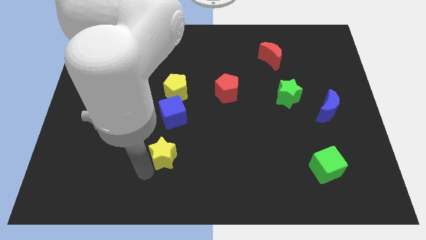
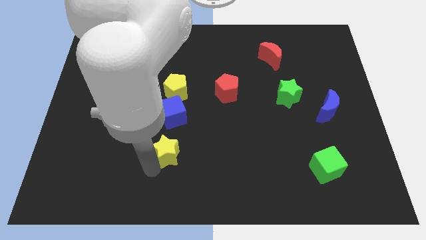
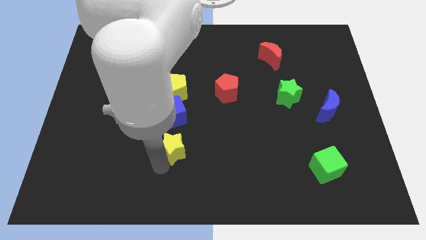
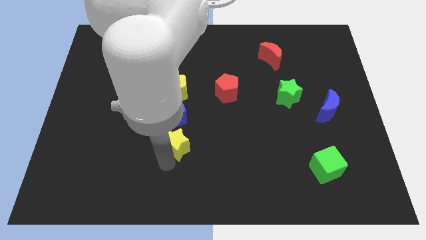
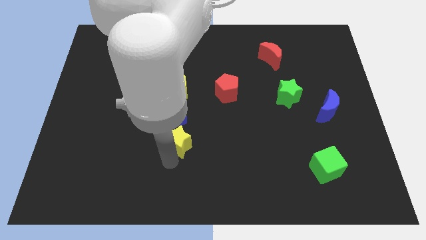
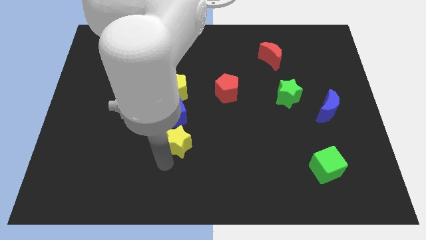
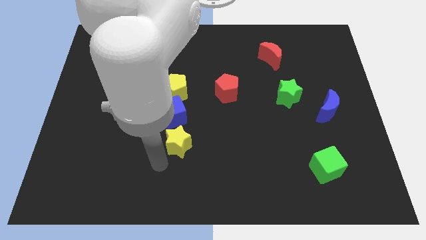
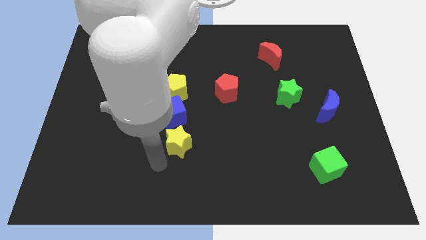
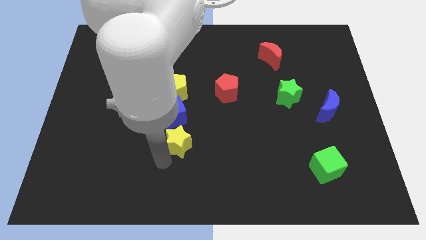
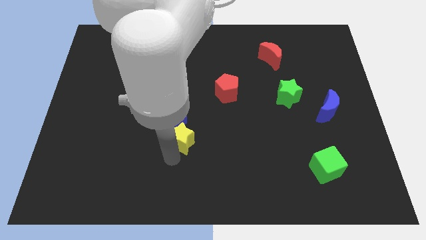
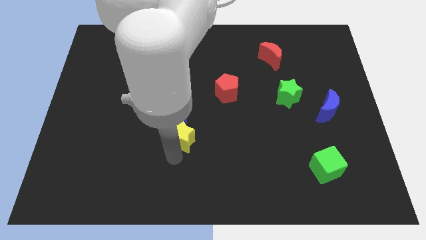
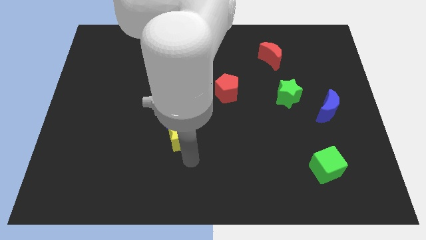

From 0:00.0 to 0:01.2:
push yellow star into blue cube

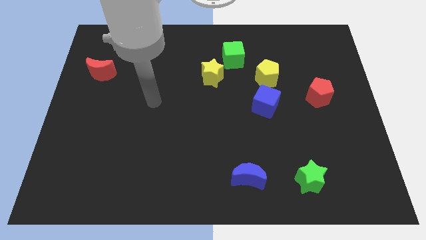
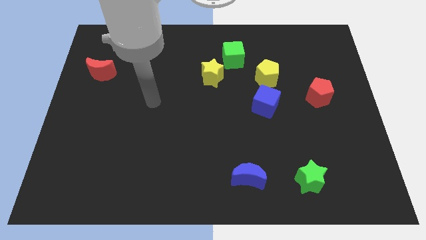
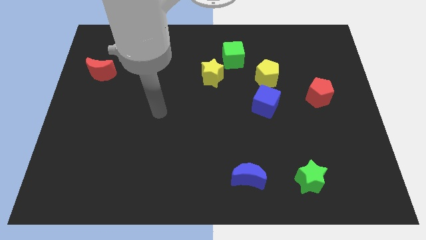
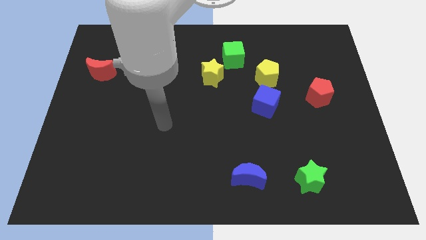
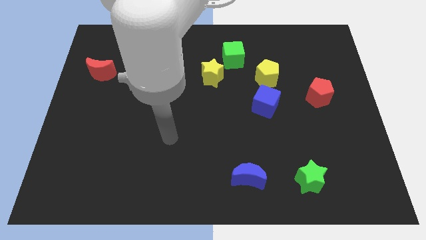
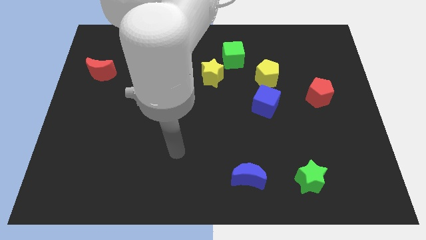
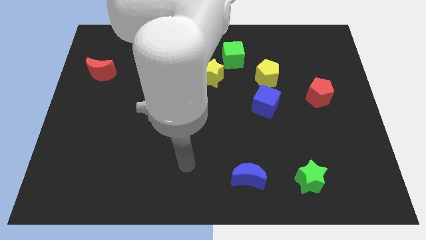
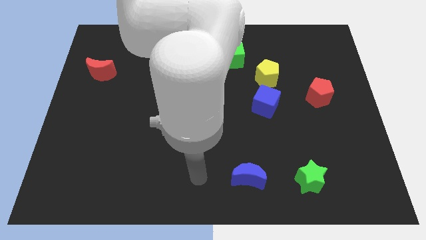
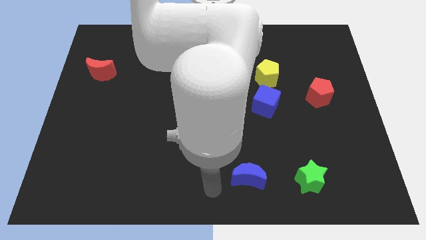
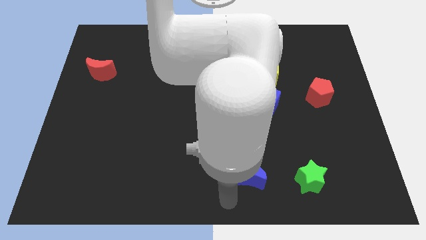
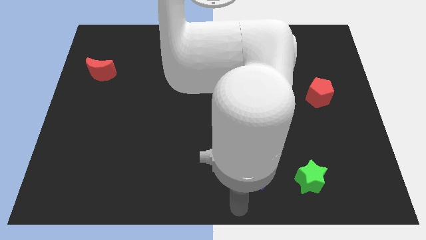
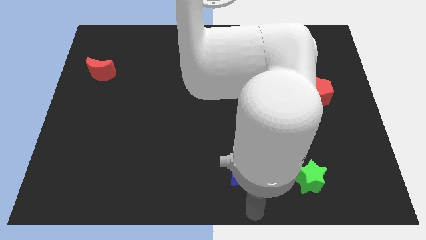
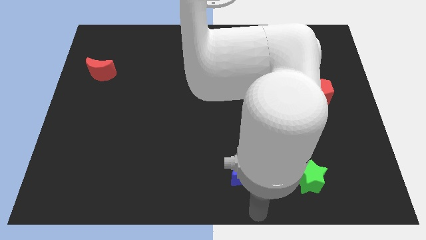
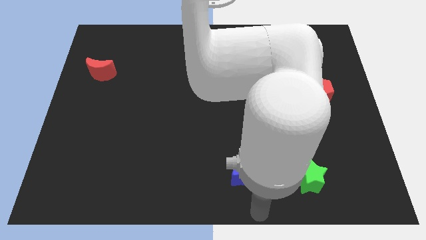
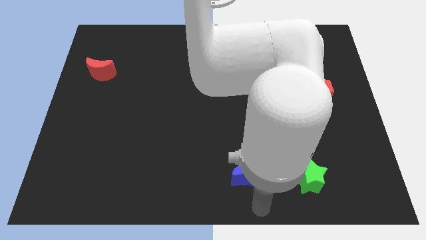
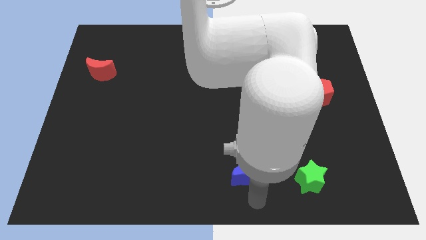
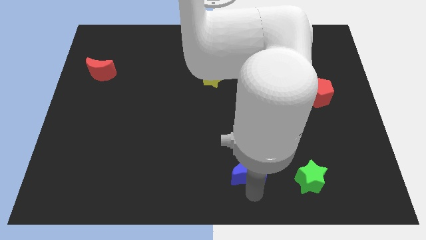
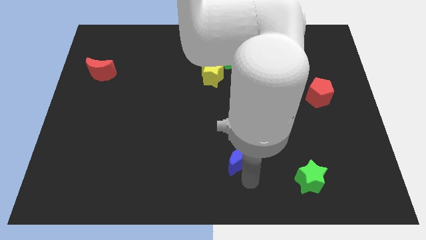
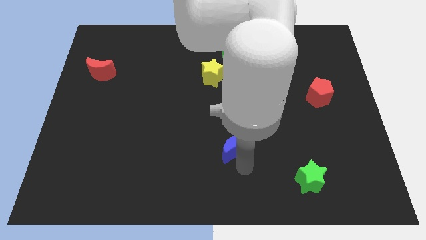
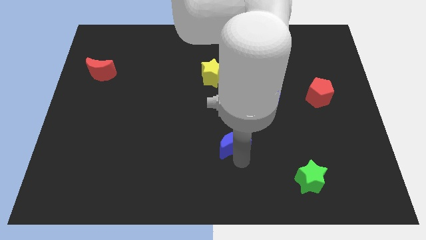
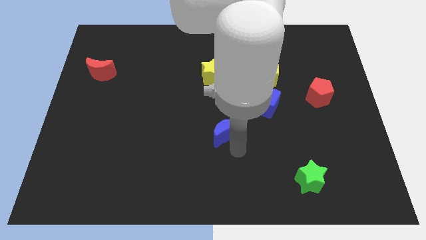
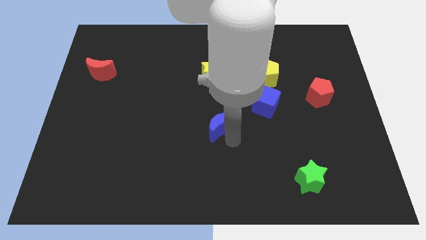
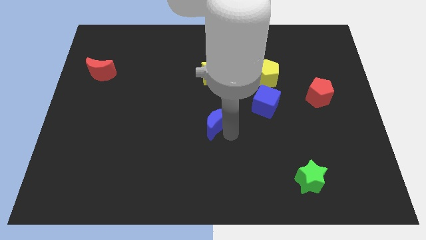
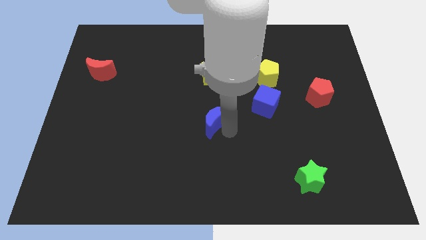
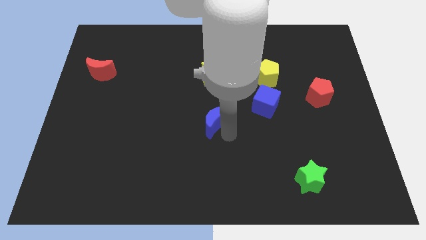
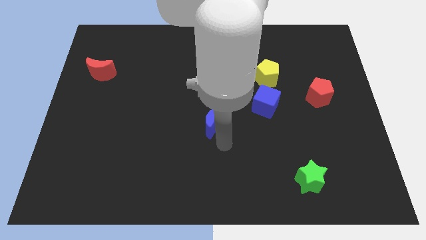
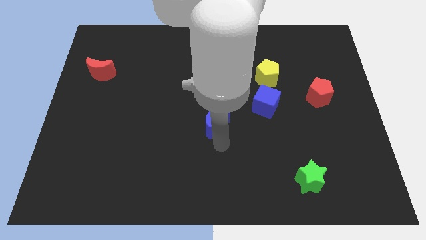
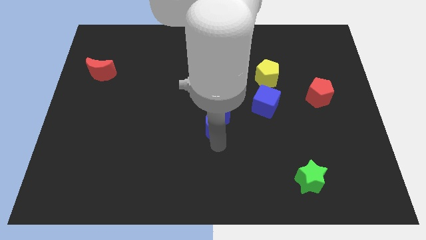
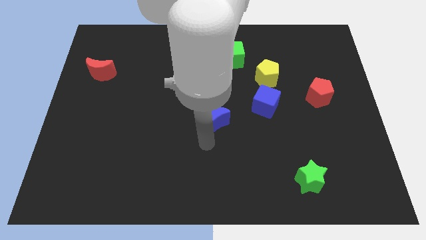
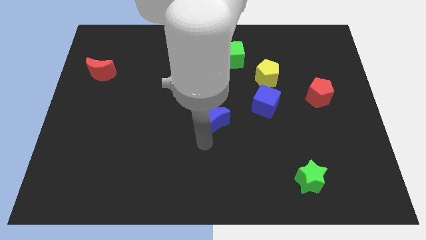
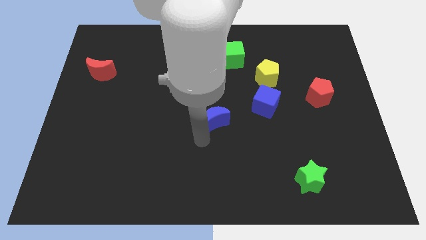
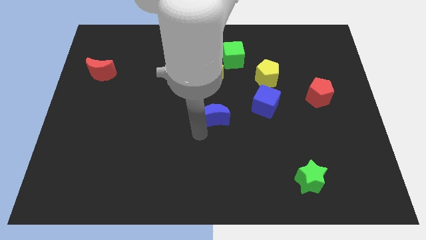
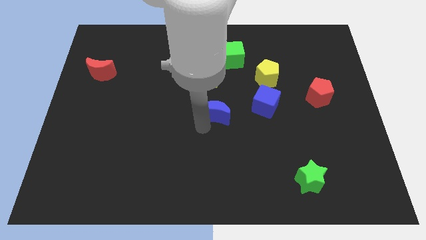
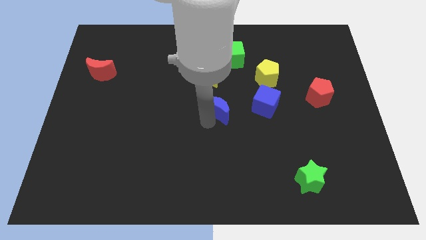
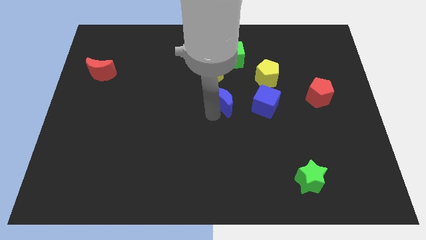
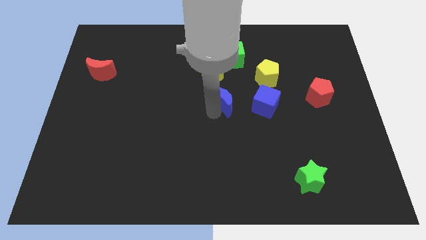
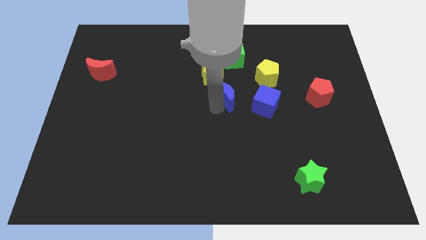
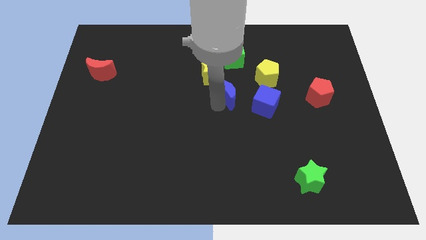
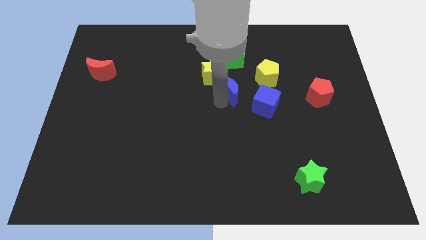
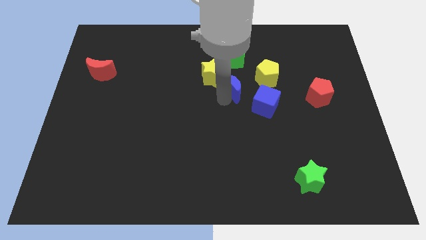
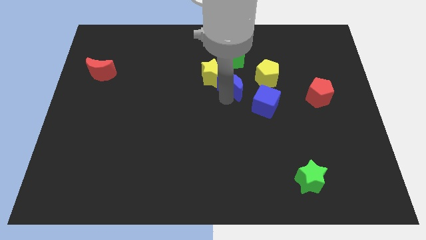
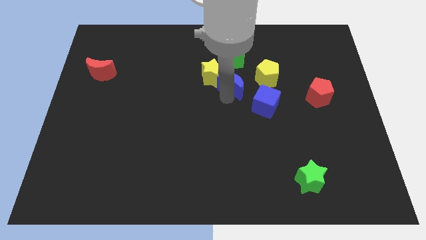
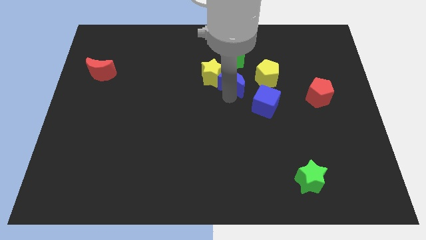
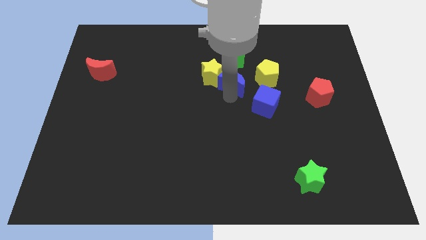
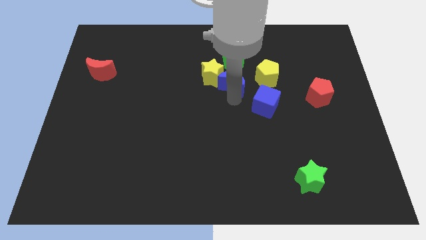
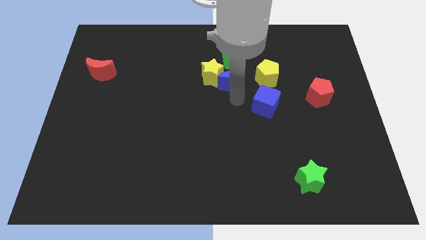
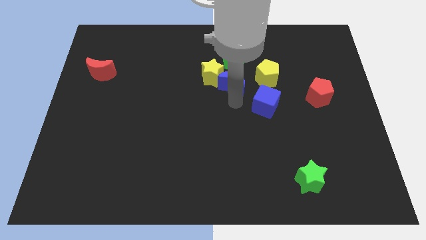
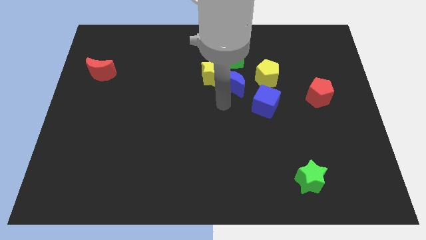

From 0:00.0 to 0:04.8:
place the blue crescent close to the yellow star

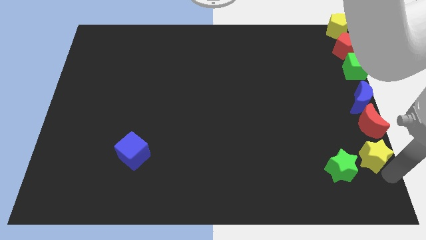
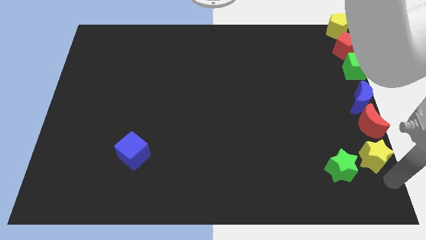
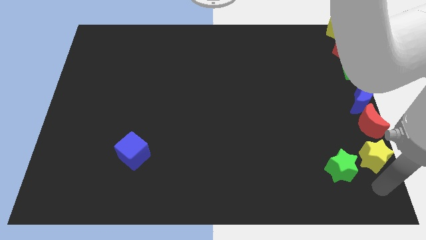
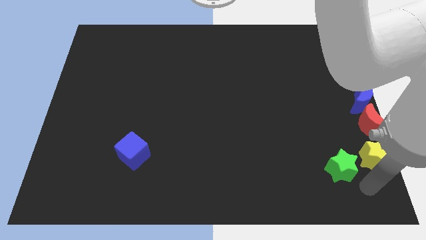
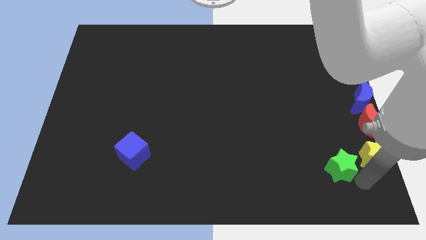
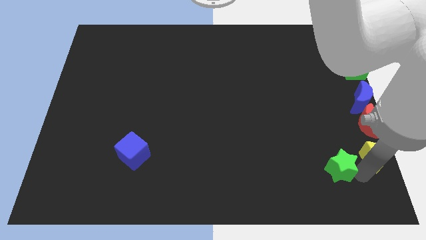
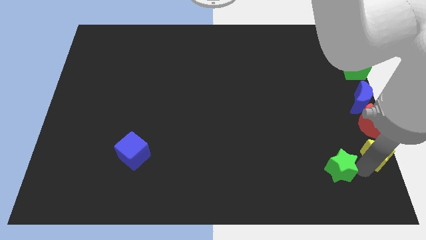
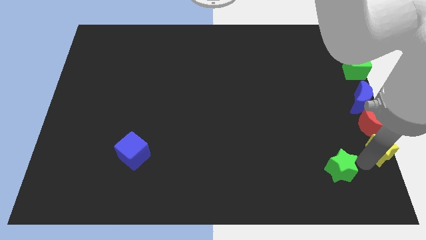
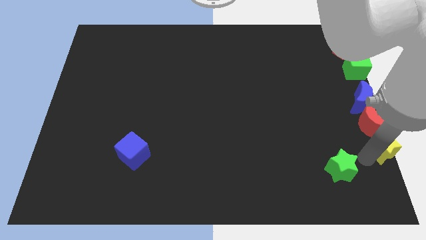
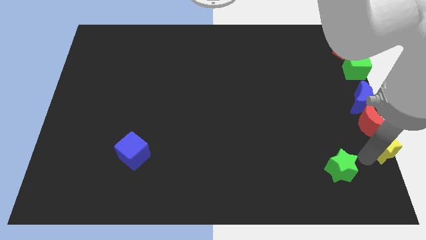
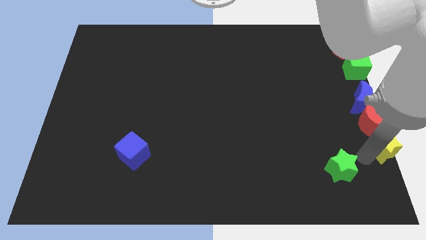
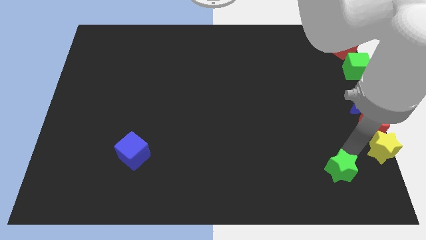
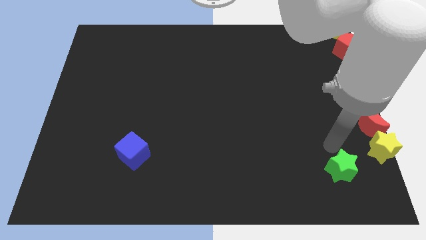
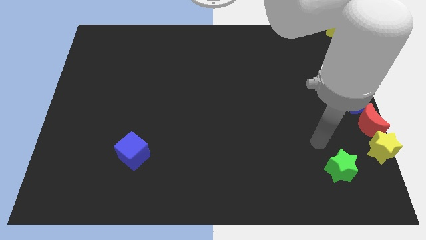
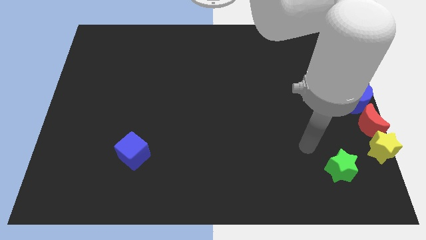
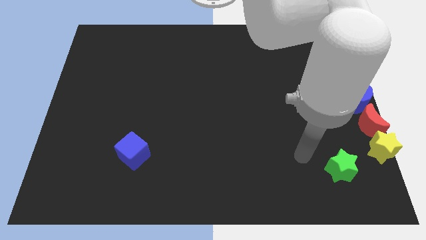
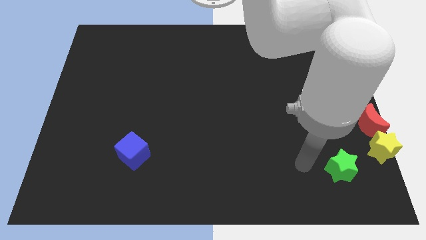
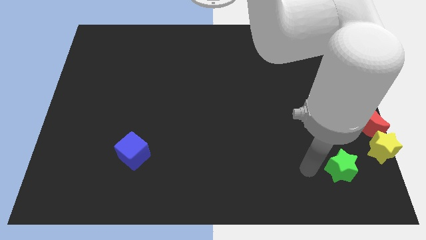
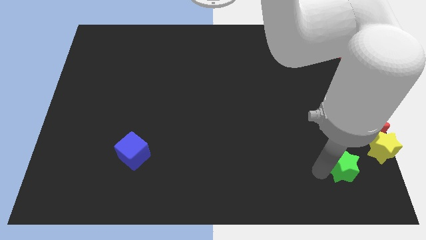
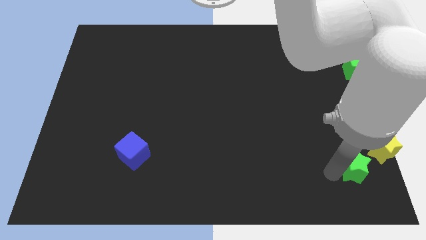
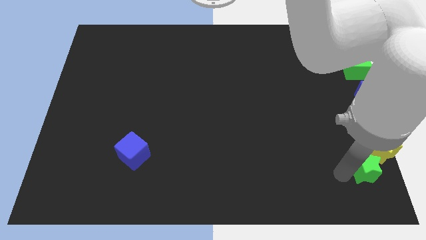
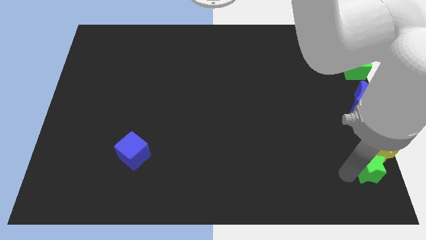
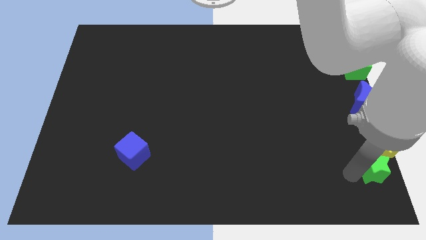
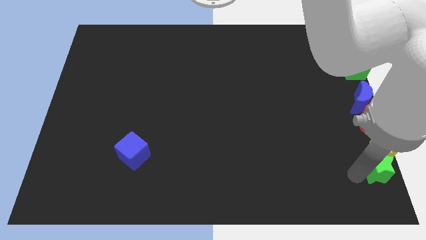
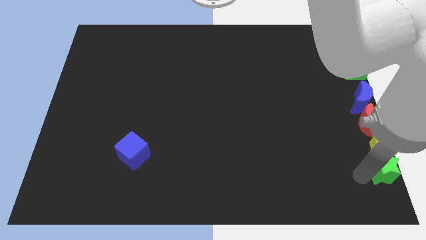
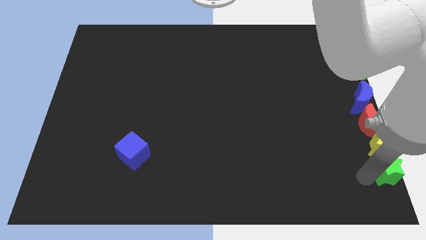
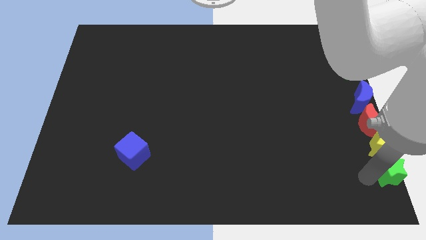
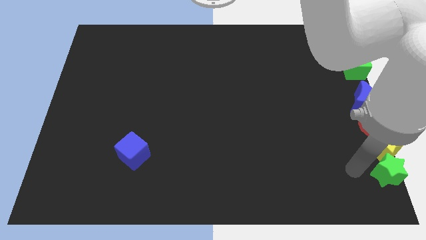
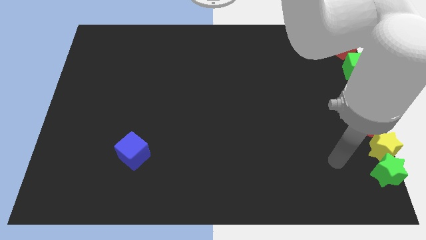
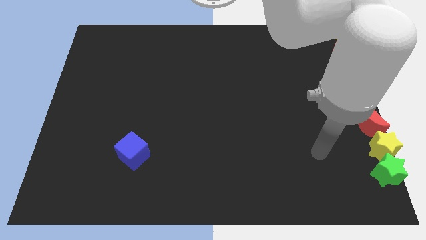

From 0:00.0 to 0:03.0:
move the green star below the yellow star at the bottom right side of the board

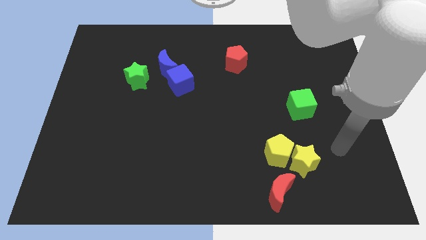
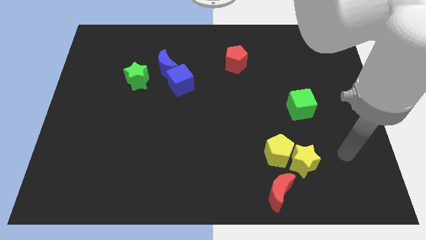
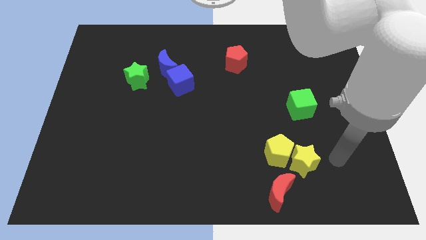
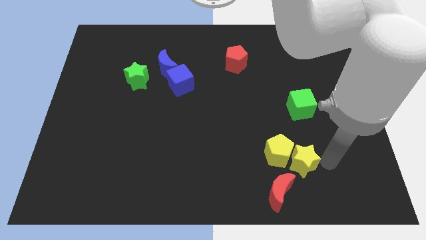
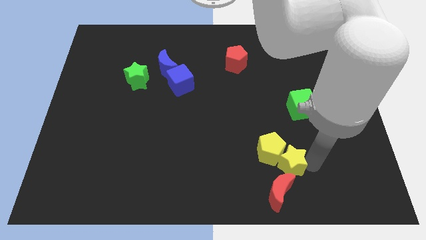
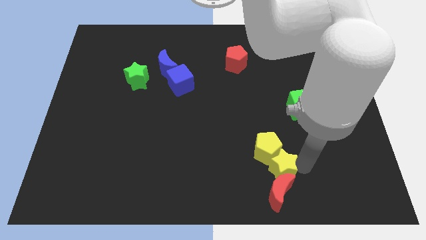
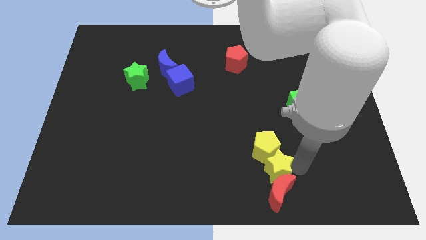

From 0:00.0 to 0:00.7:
place the yellow star above the red moon
